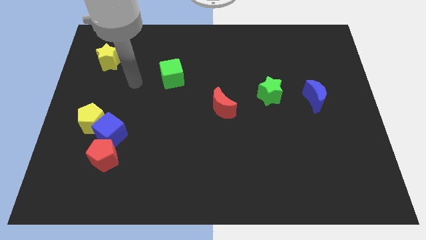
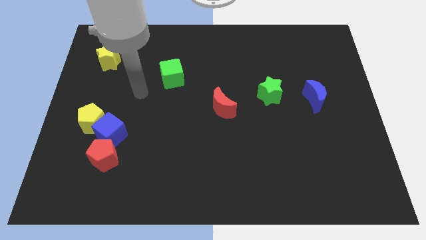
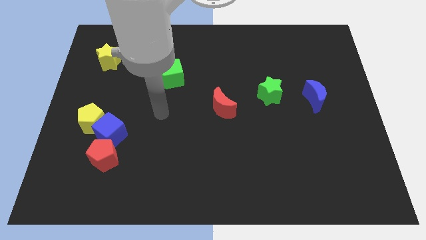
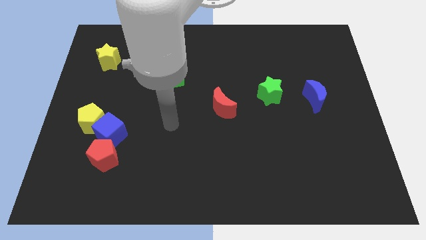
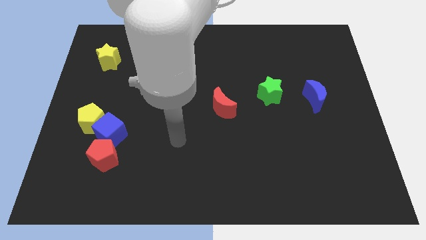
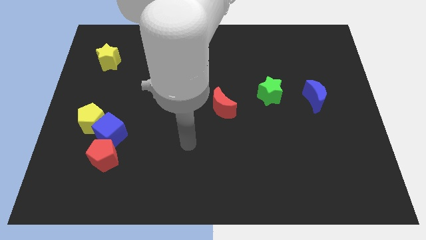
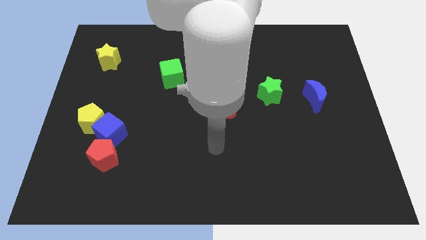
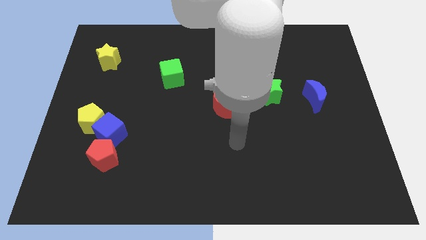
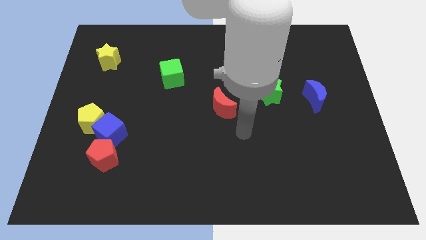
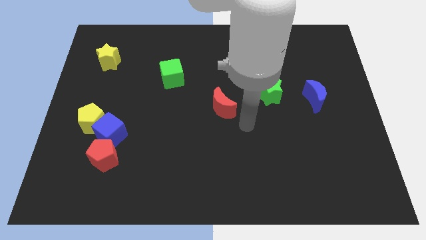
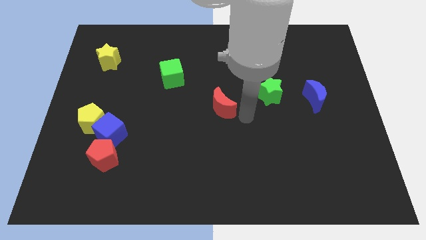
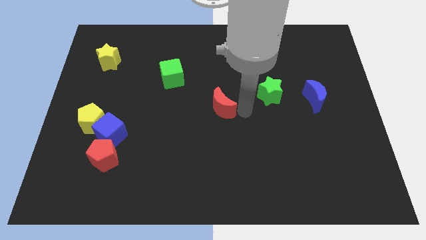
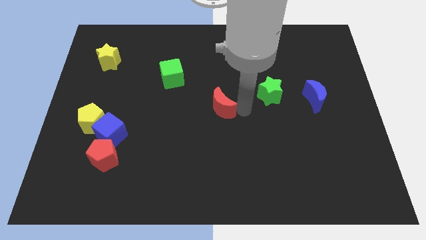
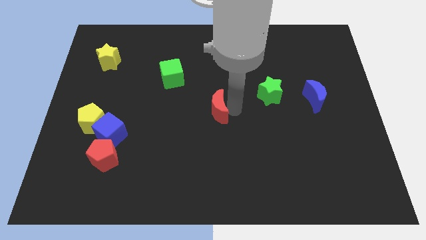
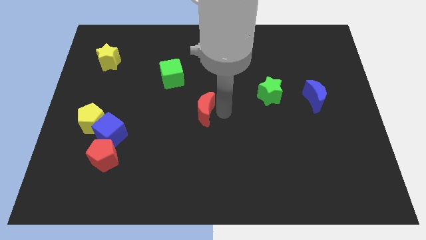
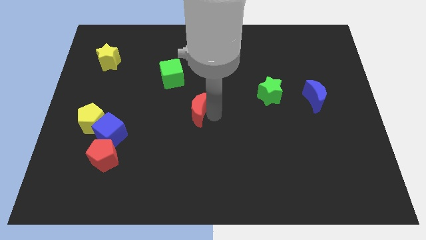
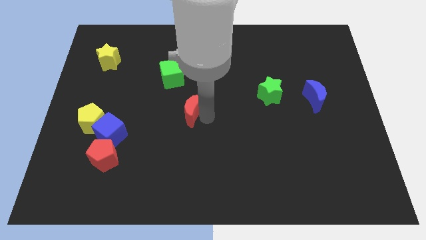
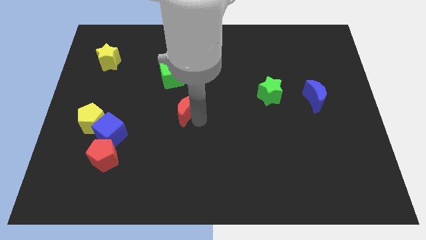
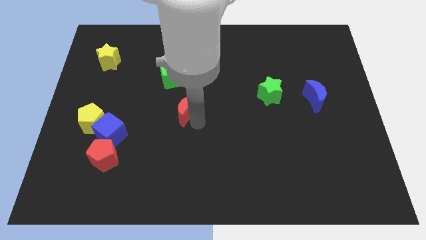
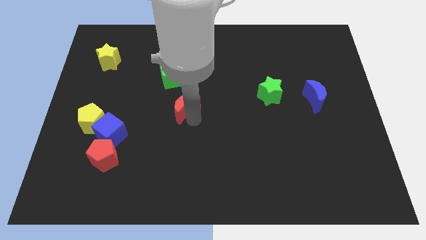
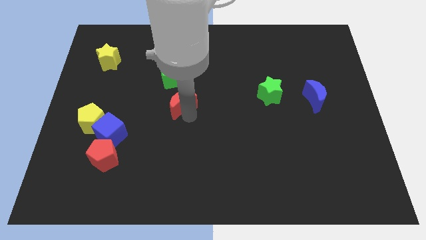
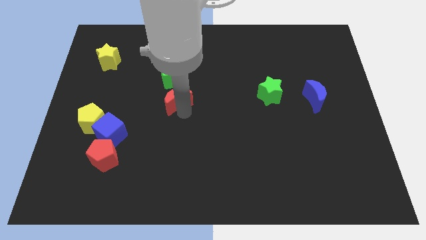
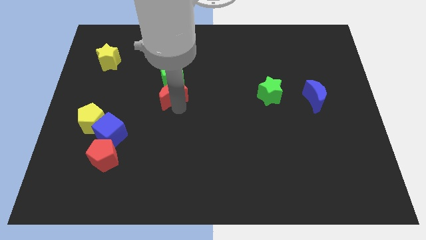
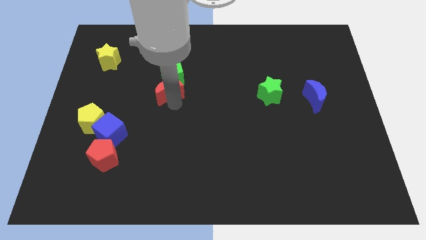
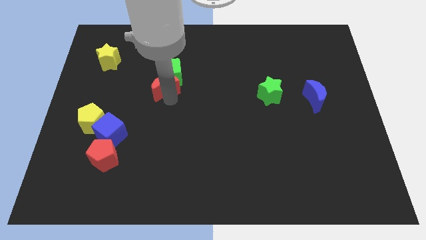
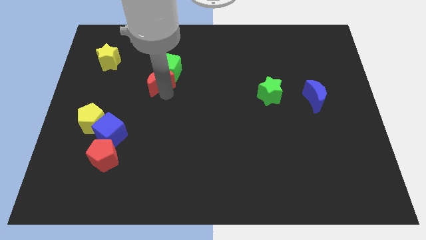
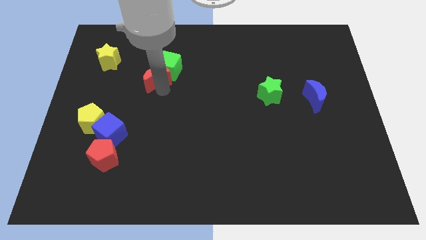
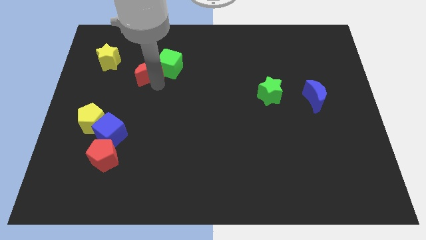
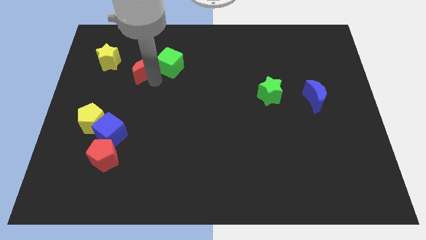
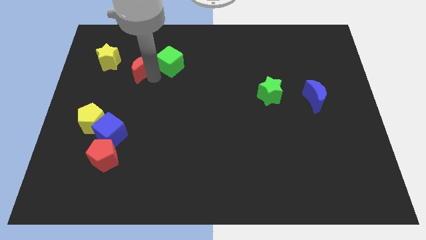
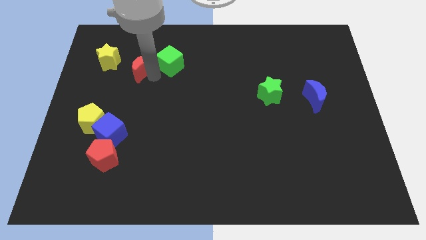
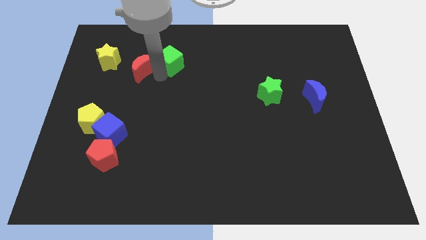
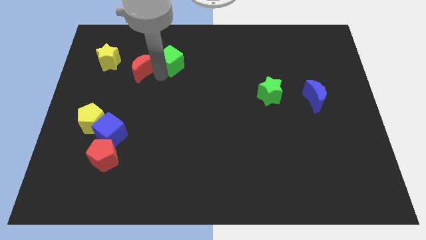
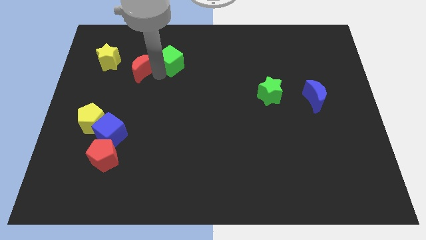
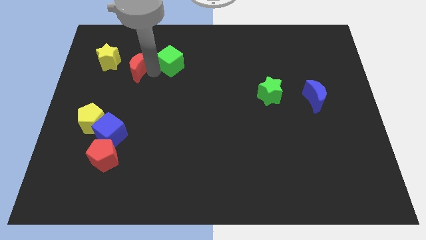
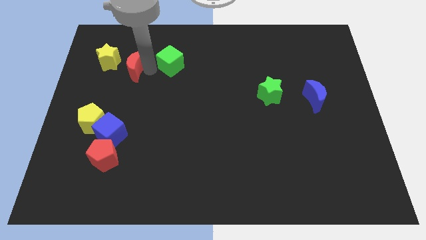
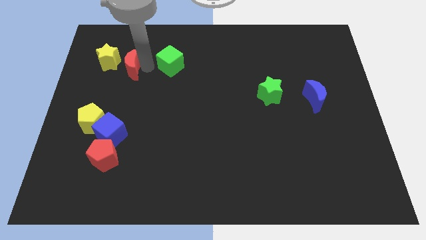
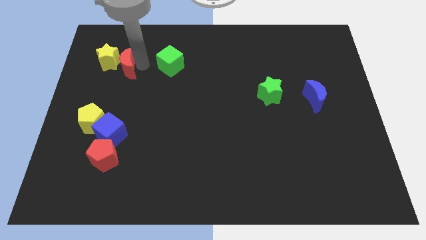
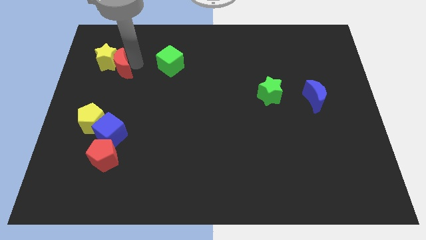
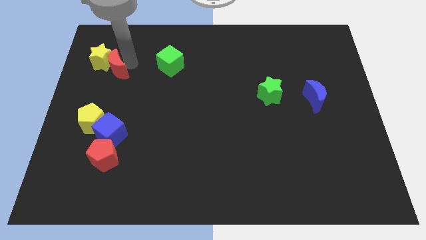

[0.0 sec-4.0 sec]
move the red moon to the yellow star

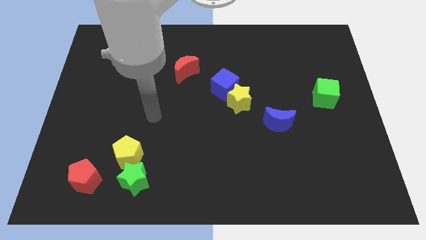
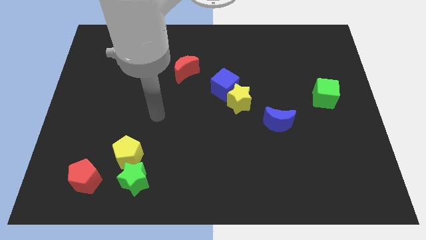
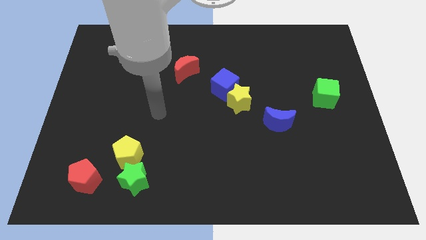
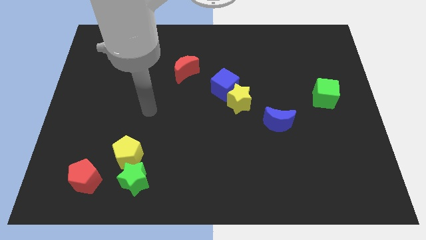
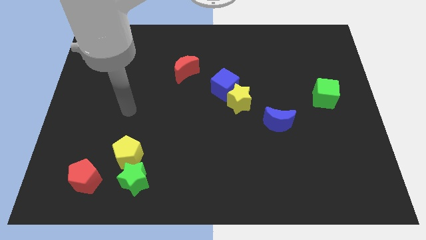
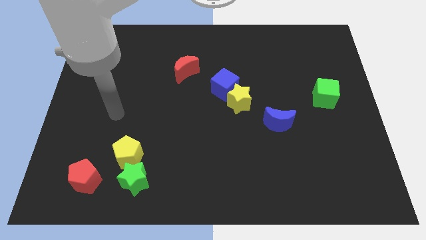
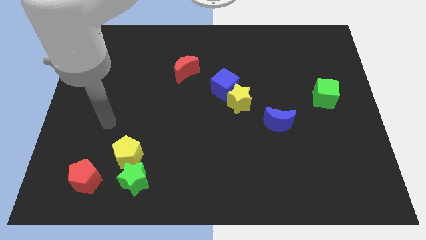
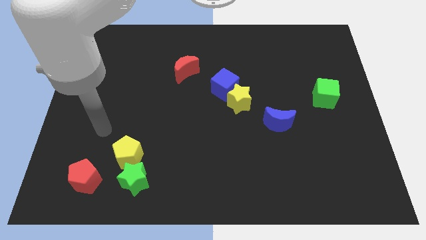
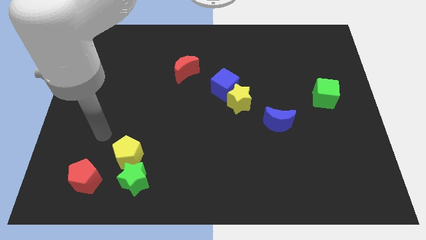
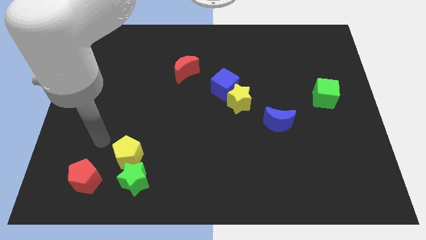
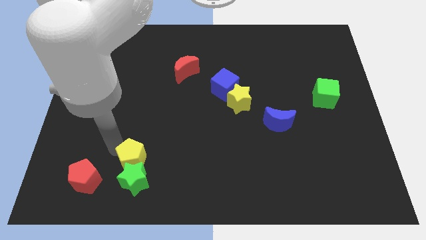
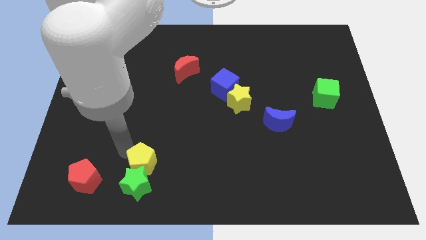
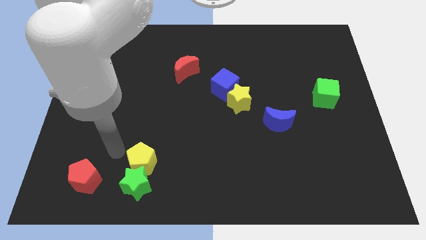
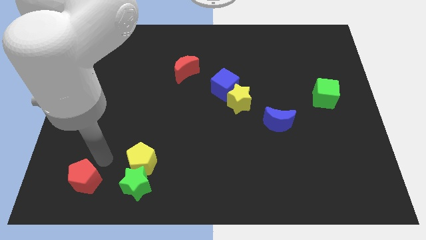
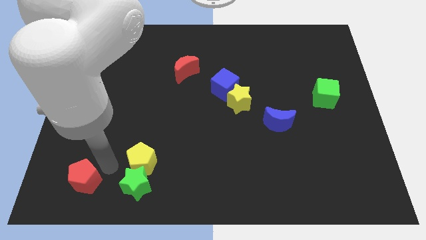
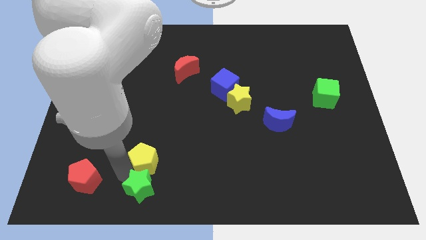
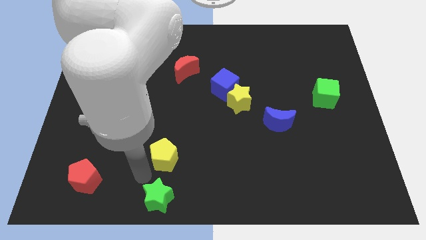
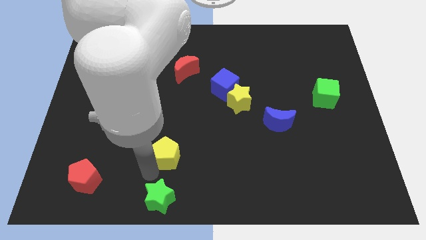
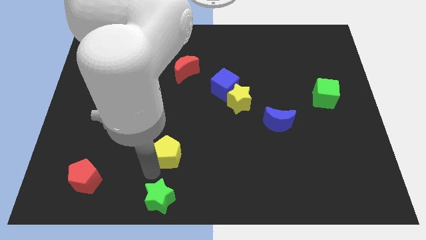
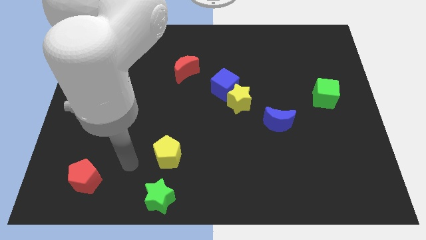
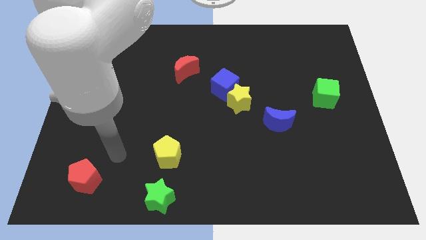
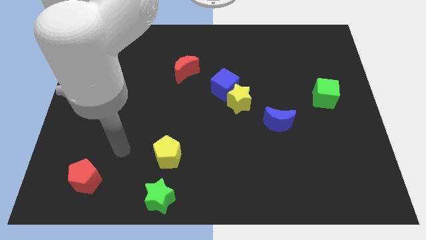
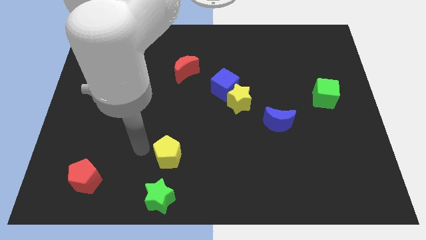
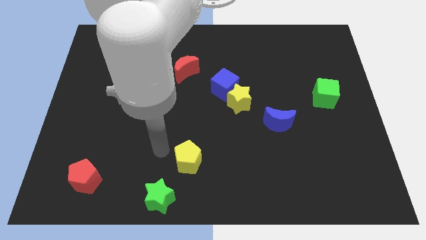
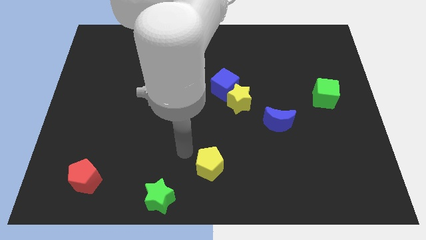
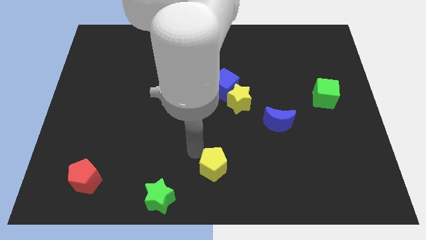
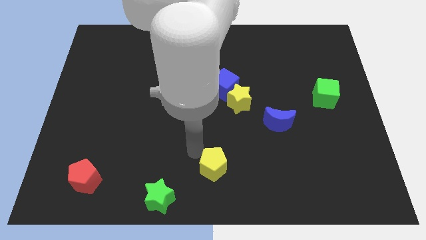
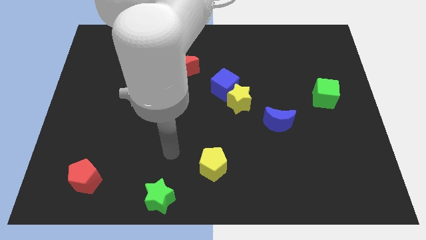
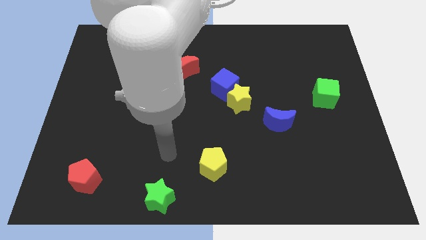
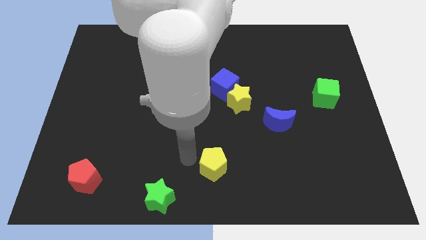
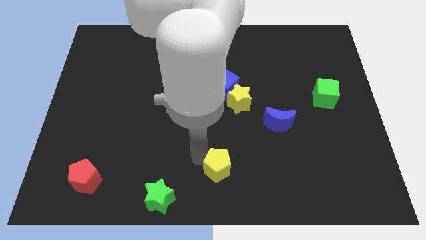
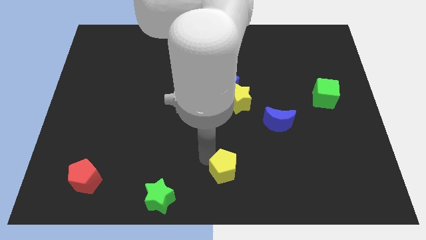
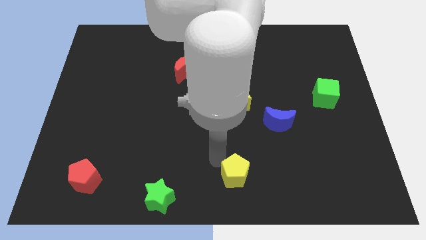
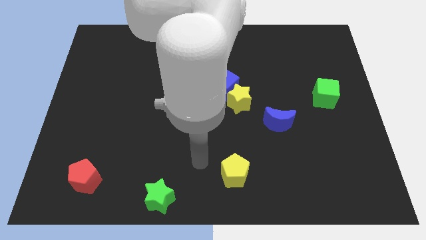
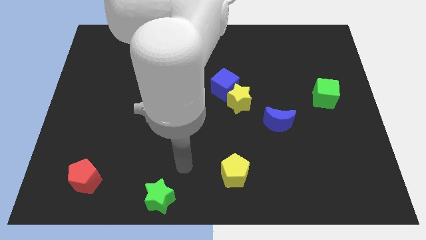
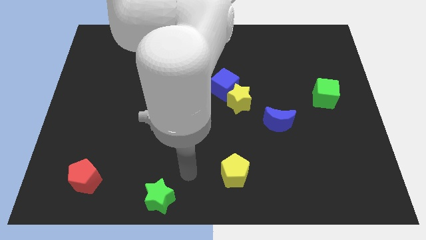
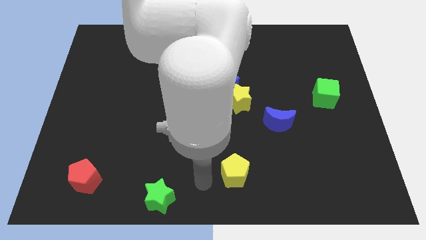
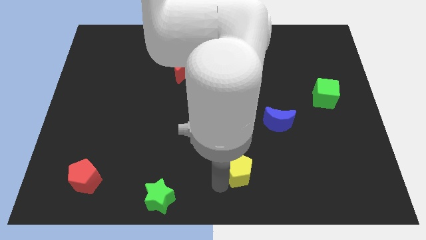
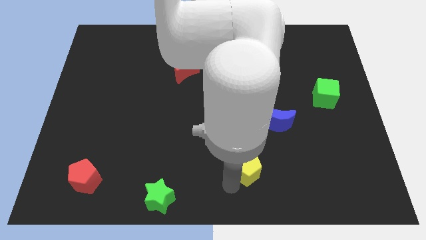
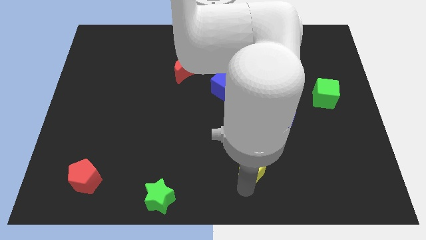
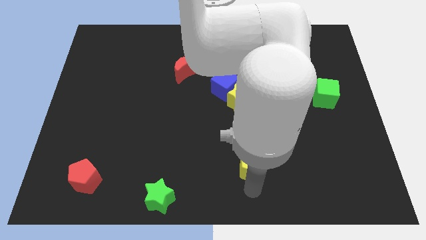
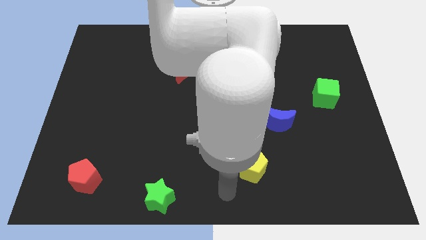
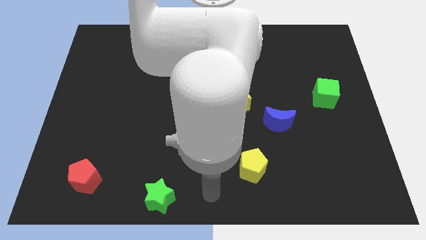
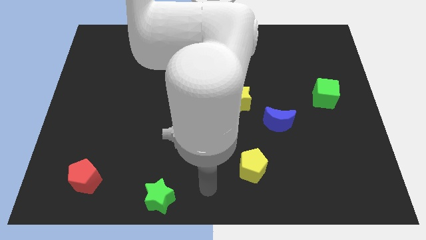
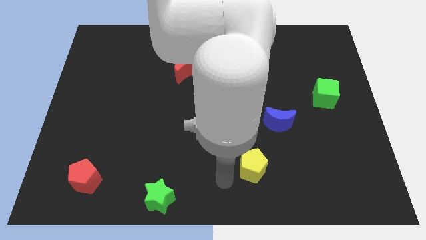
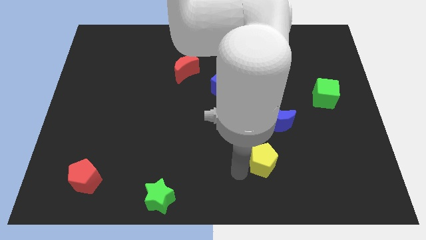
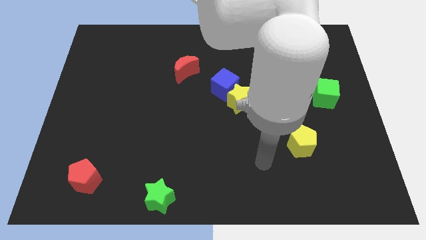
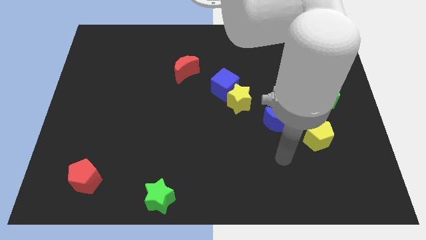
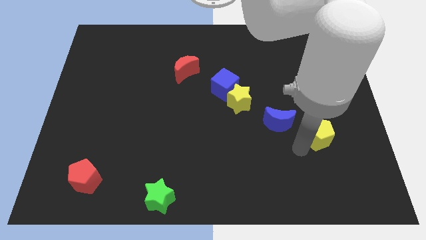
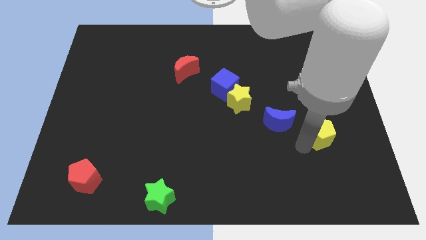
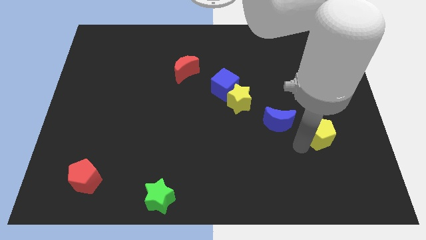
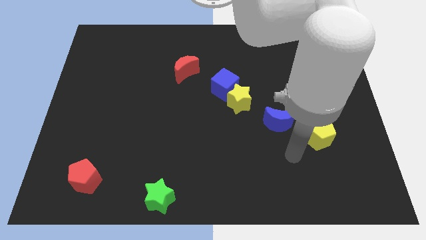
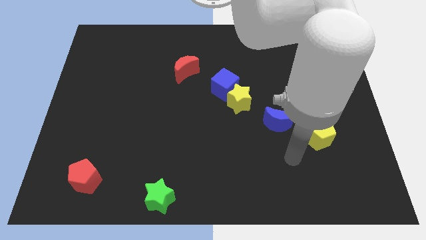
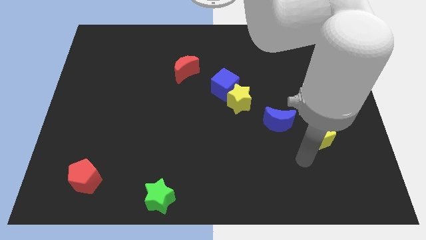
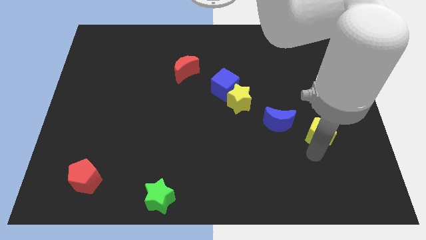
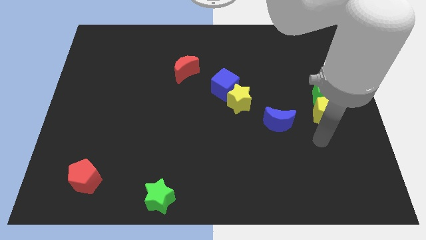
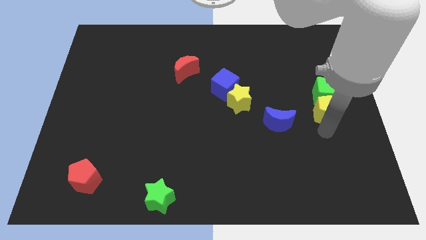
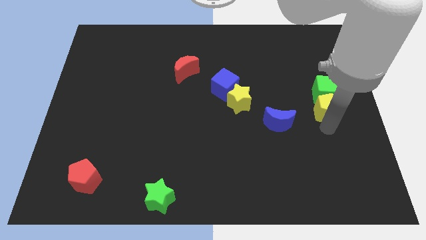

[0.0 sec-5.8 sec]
put the yellow pentagon next to the green cube
